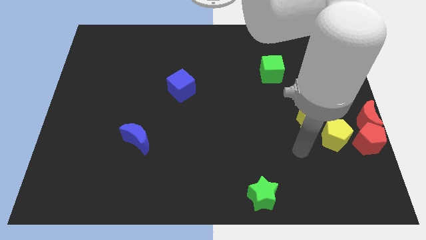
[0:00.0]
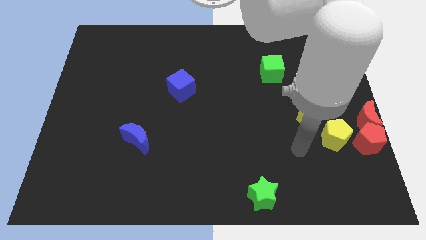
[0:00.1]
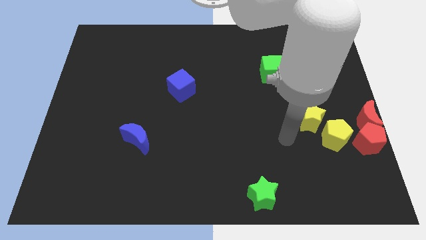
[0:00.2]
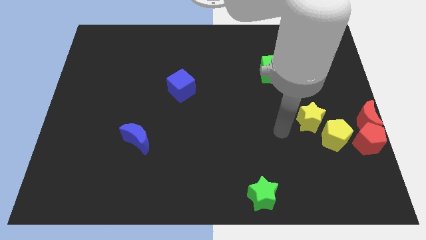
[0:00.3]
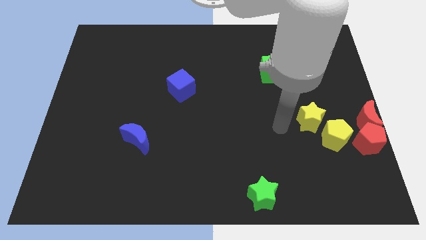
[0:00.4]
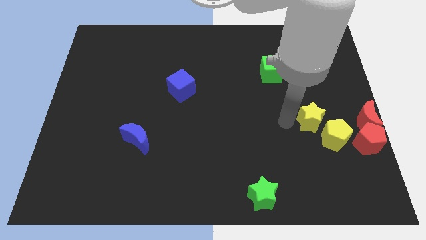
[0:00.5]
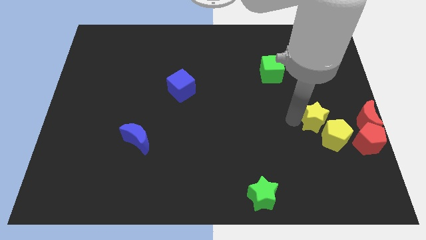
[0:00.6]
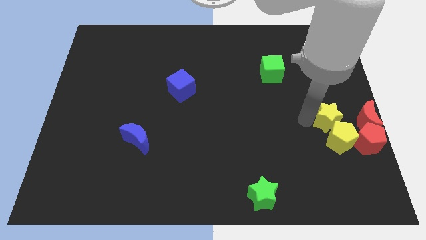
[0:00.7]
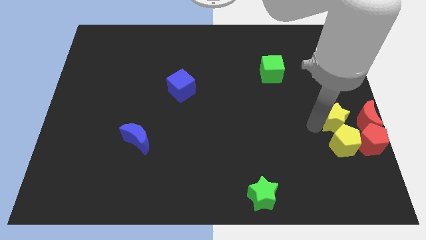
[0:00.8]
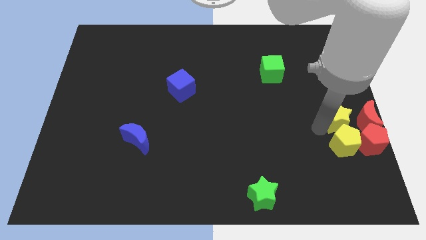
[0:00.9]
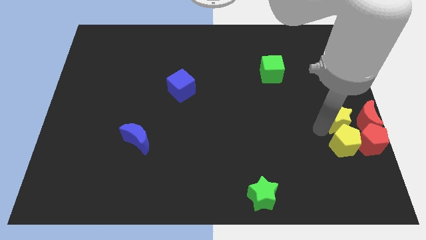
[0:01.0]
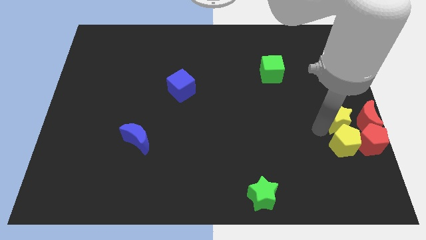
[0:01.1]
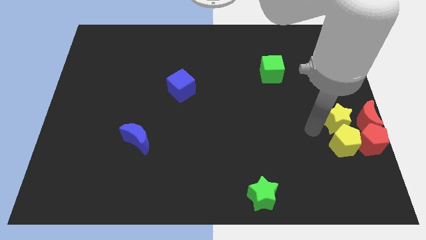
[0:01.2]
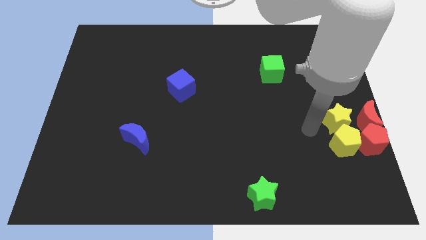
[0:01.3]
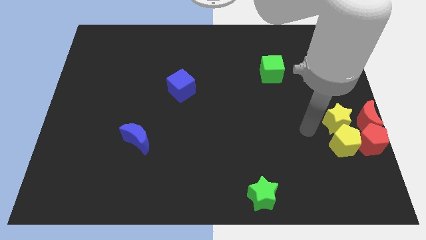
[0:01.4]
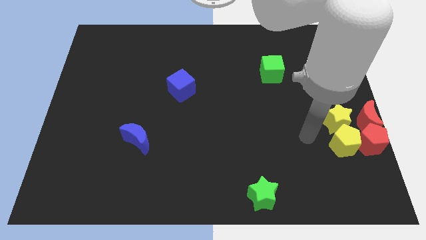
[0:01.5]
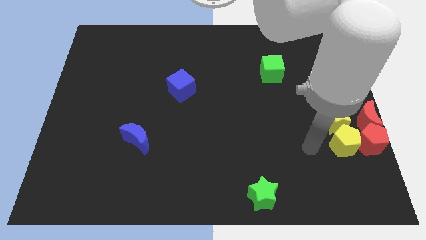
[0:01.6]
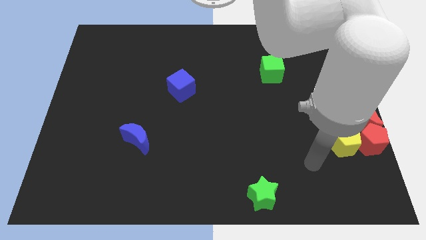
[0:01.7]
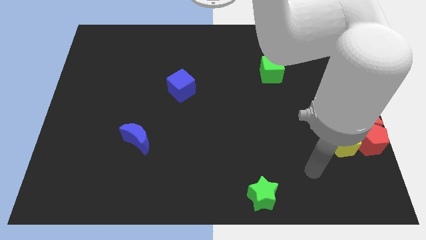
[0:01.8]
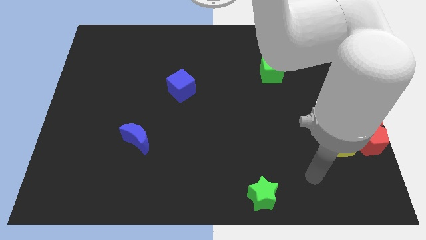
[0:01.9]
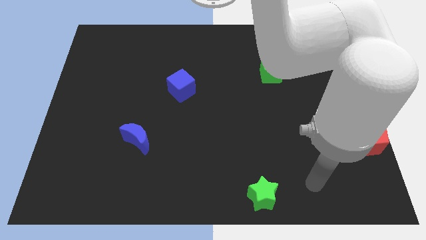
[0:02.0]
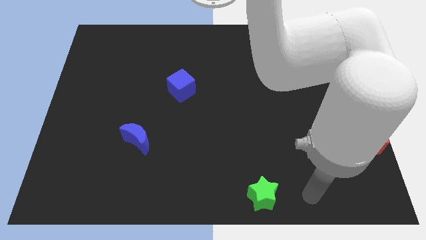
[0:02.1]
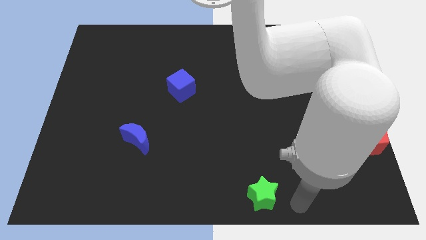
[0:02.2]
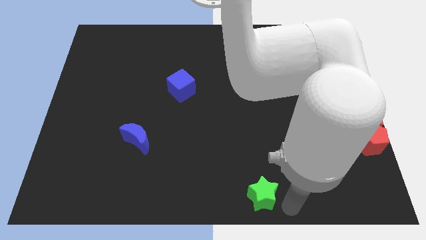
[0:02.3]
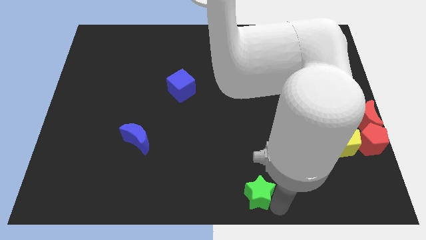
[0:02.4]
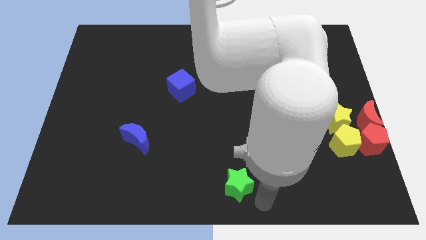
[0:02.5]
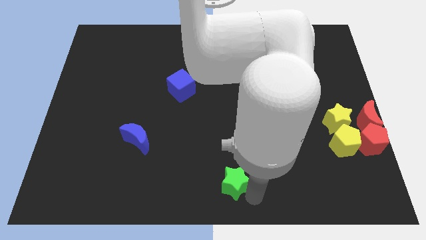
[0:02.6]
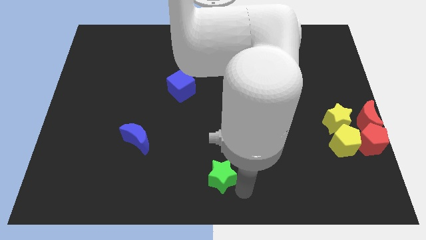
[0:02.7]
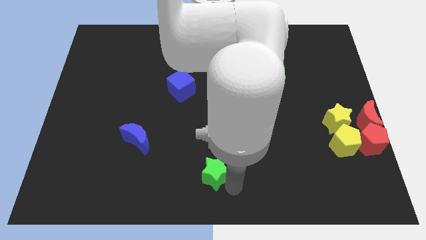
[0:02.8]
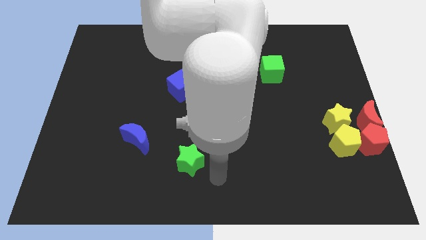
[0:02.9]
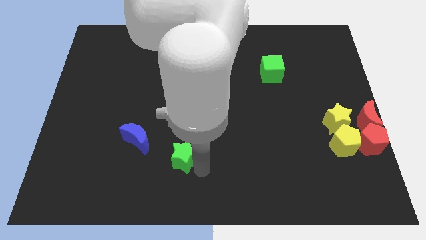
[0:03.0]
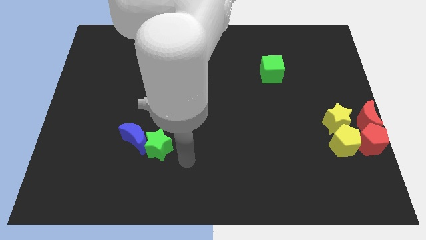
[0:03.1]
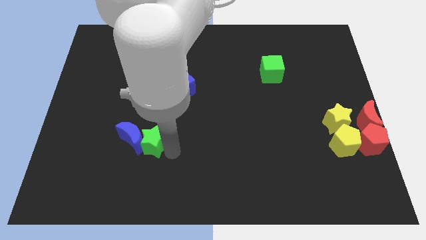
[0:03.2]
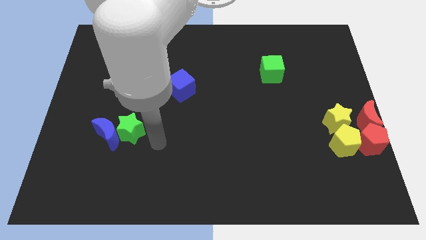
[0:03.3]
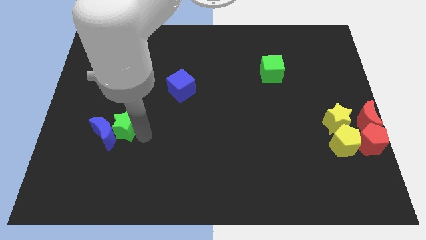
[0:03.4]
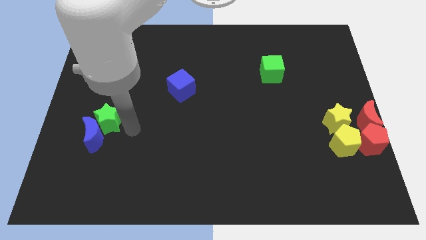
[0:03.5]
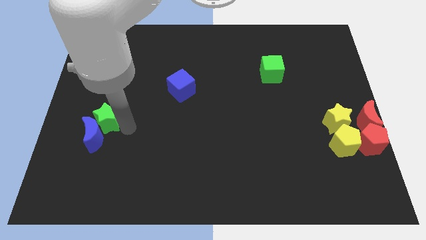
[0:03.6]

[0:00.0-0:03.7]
push the green star into the blue crescent

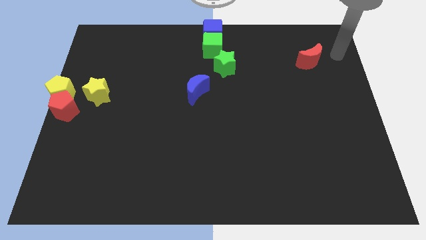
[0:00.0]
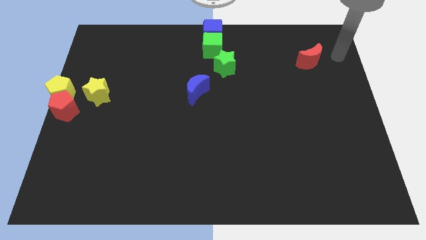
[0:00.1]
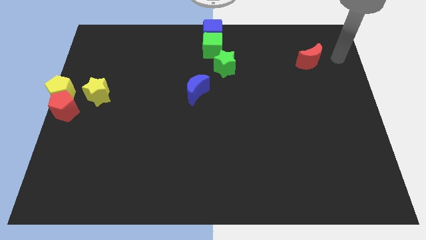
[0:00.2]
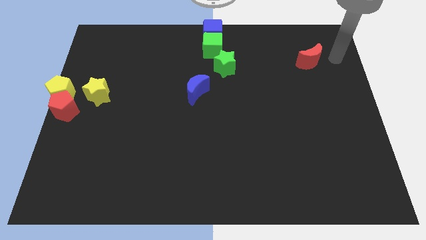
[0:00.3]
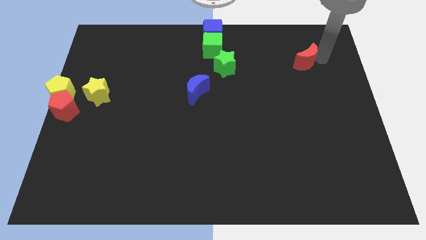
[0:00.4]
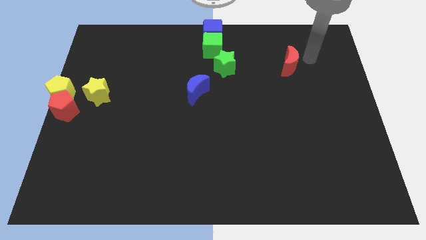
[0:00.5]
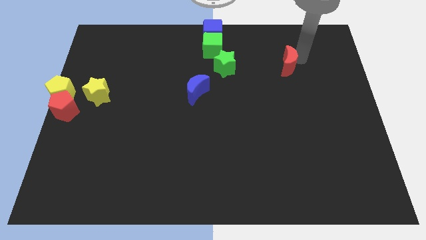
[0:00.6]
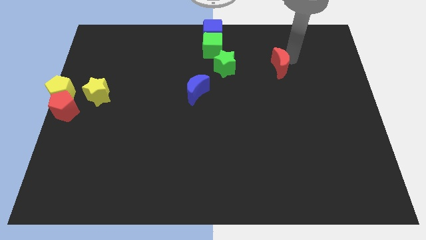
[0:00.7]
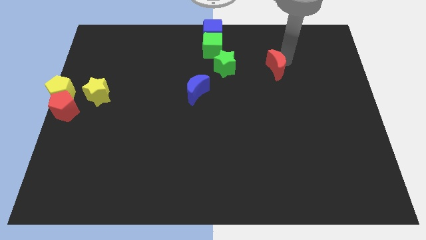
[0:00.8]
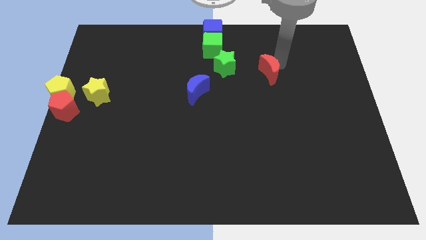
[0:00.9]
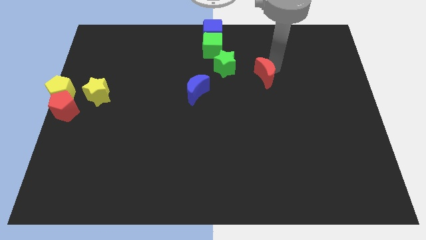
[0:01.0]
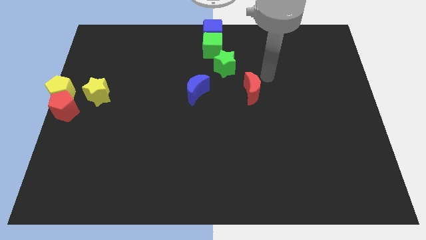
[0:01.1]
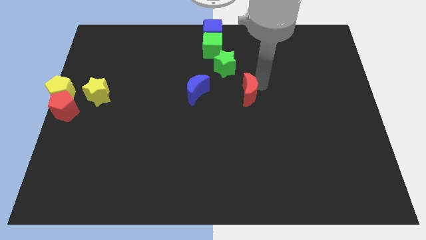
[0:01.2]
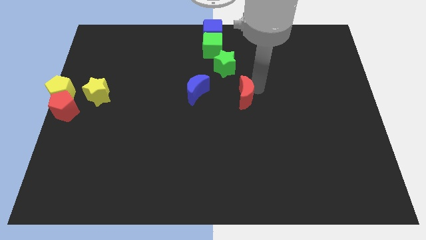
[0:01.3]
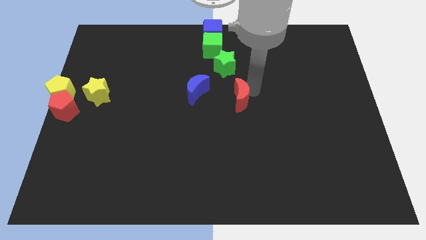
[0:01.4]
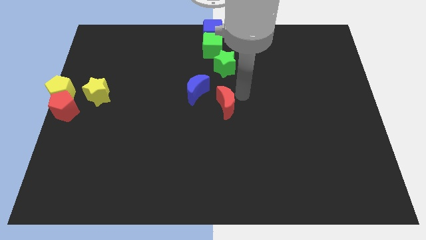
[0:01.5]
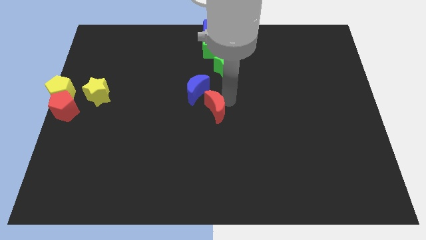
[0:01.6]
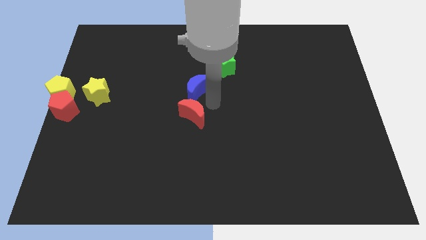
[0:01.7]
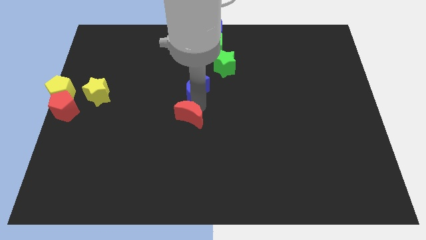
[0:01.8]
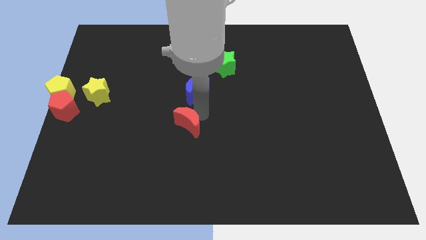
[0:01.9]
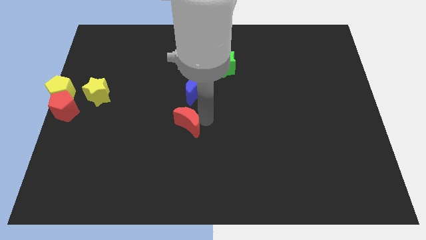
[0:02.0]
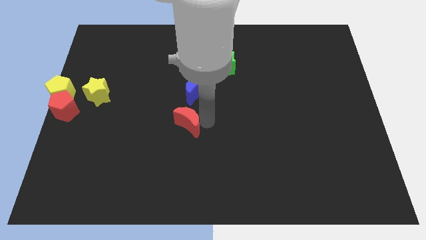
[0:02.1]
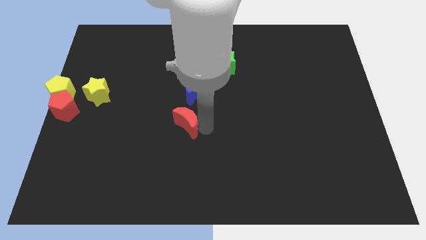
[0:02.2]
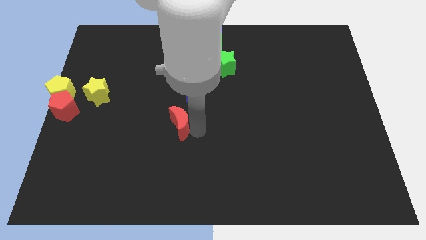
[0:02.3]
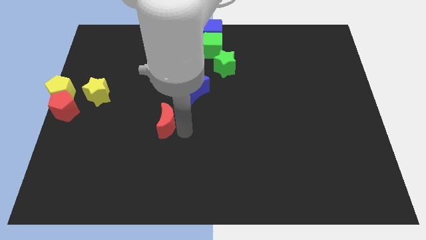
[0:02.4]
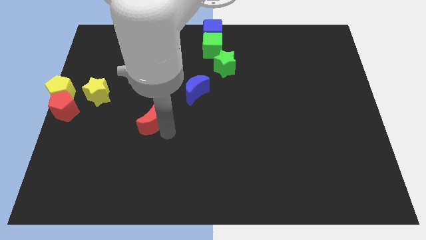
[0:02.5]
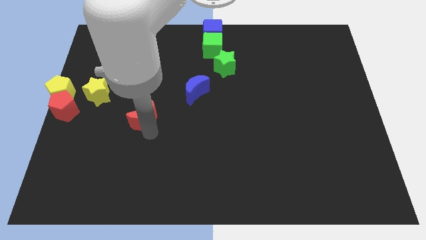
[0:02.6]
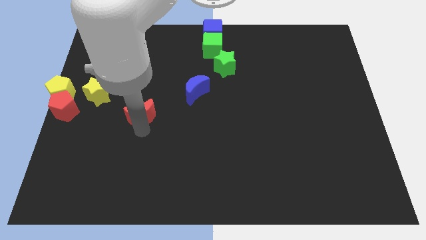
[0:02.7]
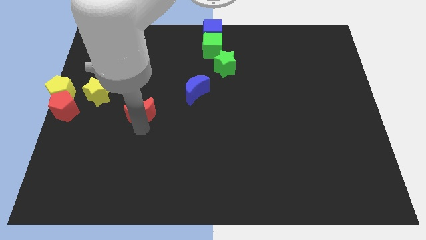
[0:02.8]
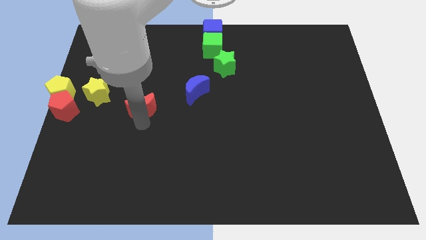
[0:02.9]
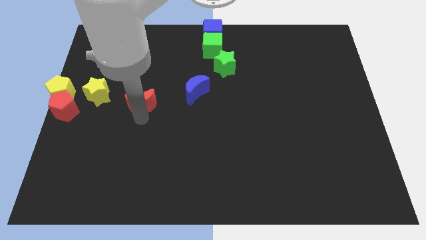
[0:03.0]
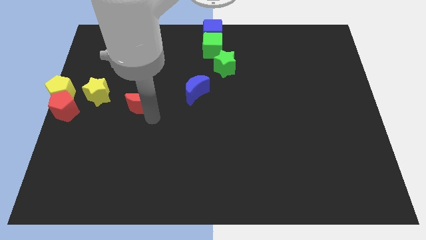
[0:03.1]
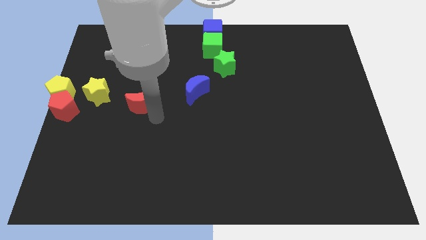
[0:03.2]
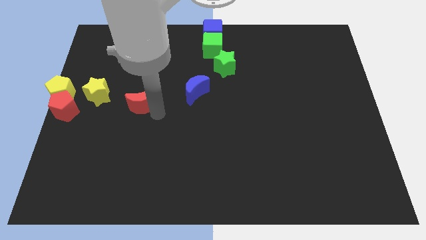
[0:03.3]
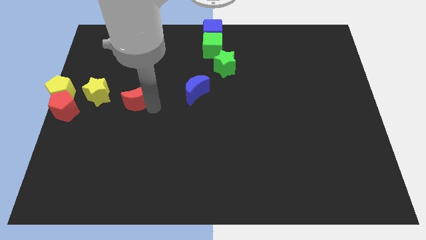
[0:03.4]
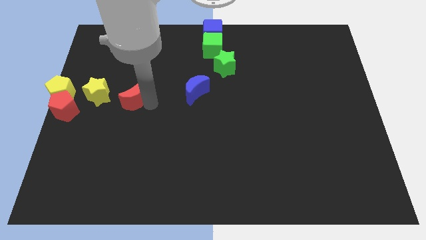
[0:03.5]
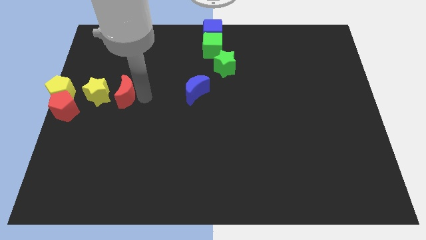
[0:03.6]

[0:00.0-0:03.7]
push red half moon towards yellow star

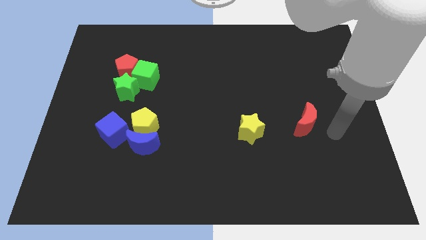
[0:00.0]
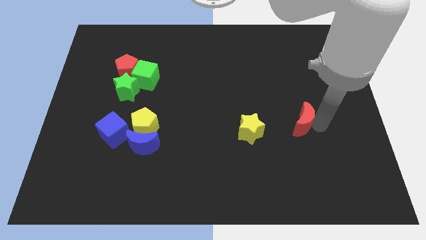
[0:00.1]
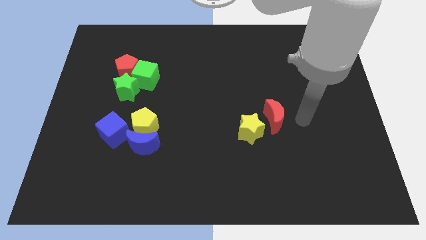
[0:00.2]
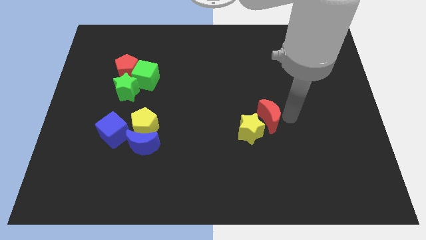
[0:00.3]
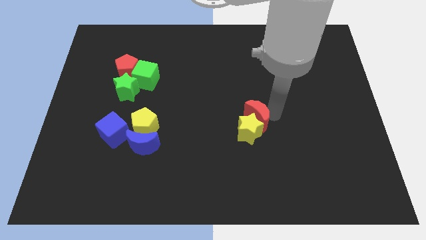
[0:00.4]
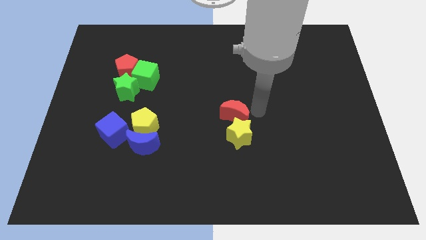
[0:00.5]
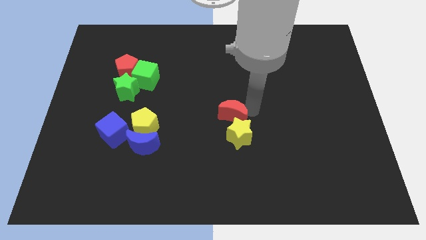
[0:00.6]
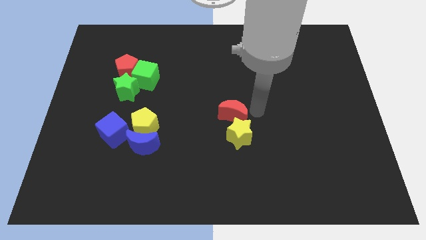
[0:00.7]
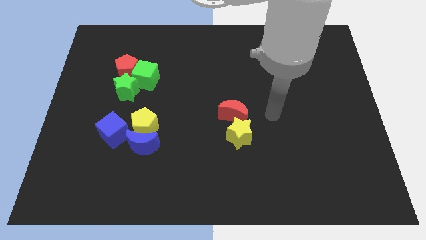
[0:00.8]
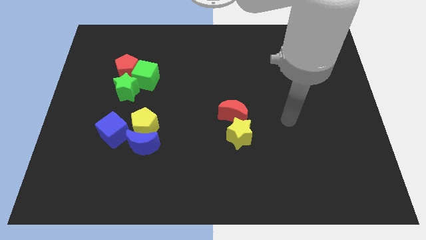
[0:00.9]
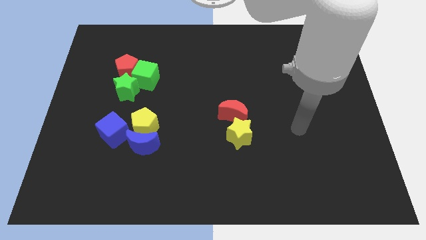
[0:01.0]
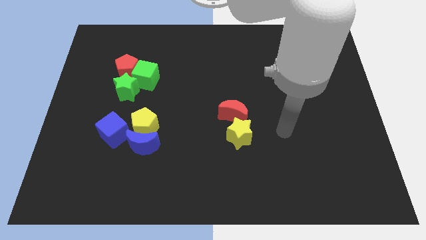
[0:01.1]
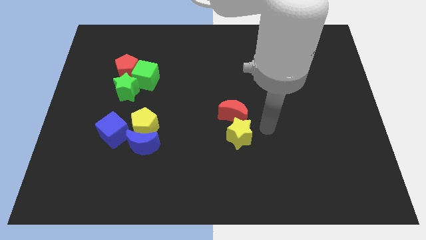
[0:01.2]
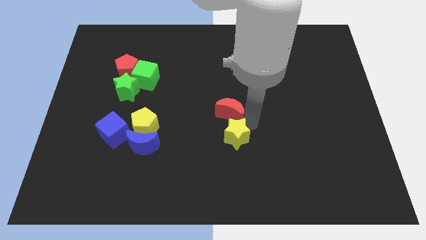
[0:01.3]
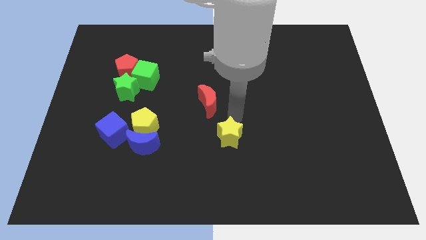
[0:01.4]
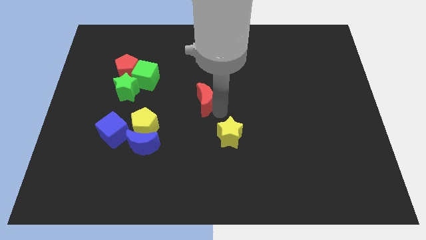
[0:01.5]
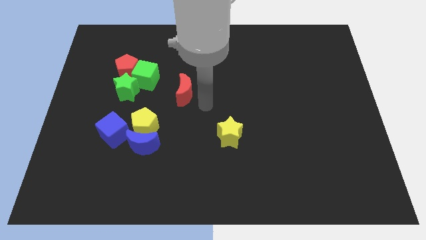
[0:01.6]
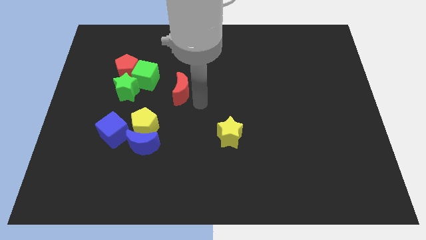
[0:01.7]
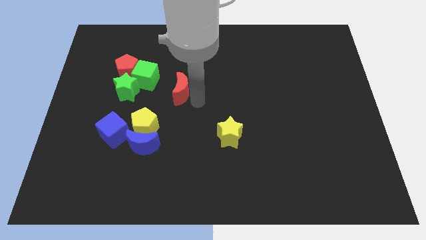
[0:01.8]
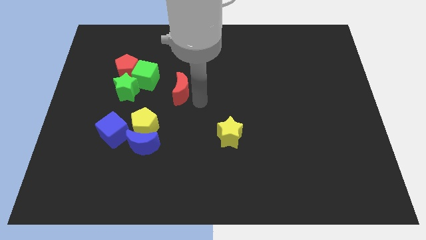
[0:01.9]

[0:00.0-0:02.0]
move the red crescent towards the green cube
